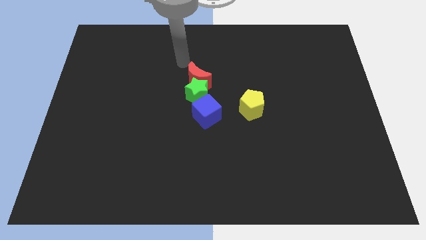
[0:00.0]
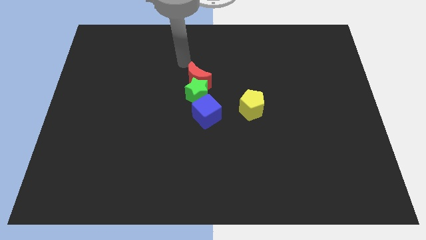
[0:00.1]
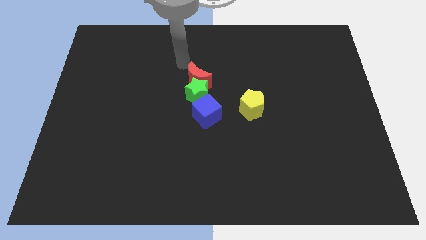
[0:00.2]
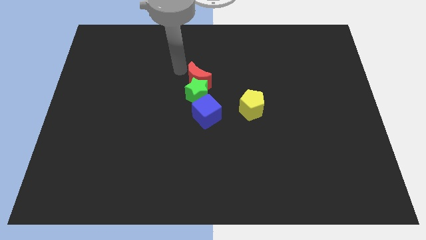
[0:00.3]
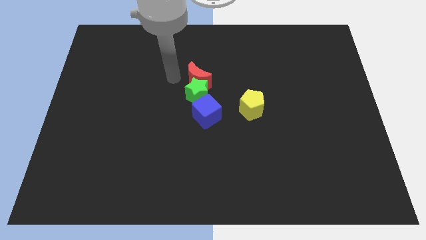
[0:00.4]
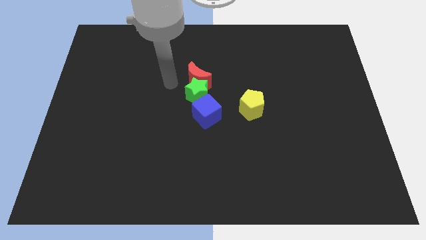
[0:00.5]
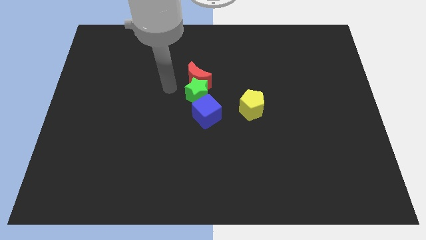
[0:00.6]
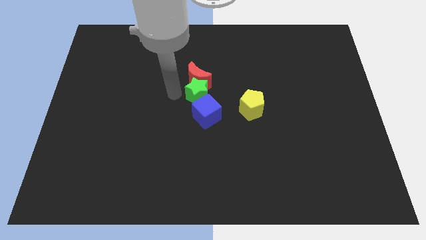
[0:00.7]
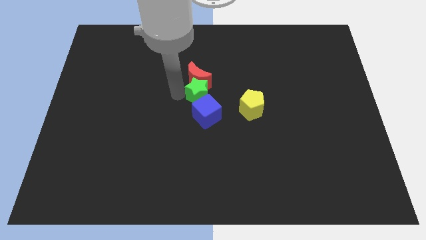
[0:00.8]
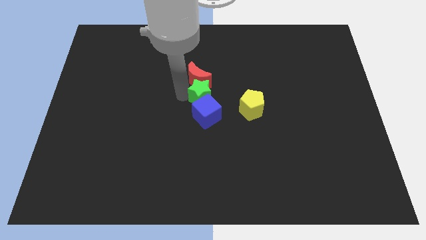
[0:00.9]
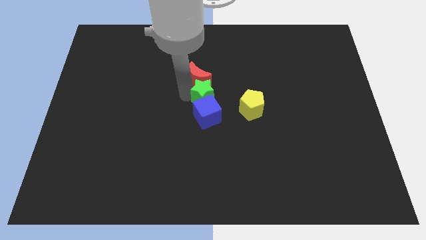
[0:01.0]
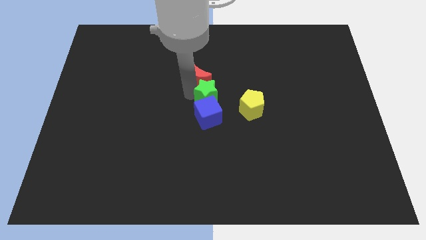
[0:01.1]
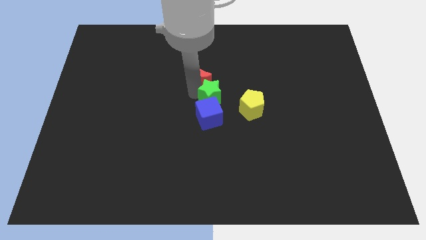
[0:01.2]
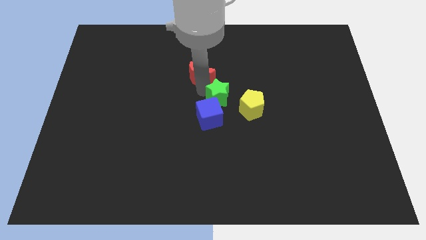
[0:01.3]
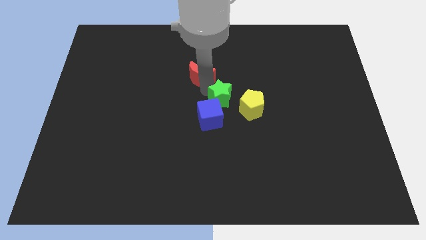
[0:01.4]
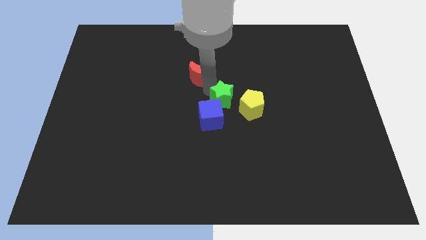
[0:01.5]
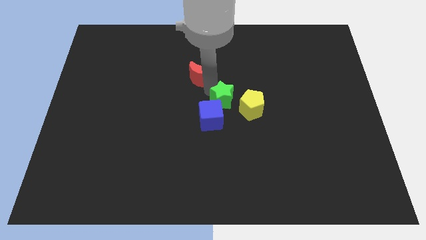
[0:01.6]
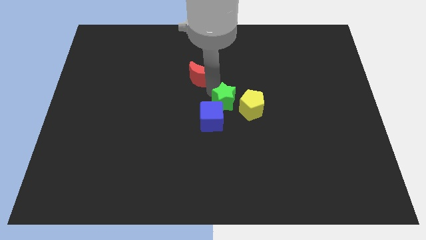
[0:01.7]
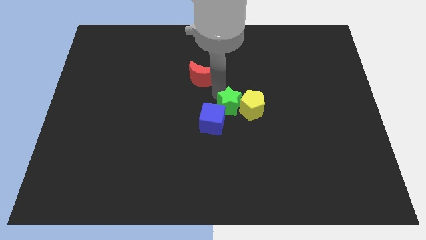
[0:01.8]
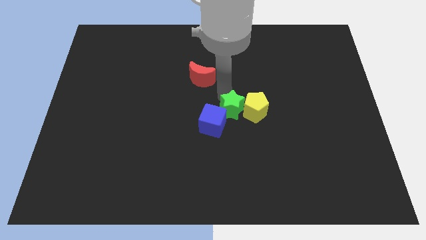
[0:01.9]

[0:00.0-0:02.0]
push the star close to the yellow block

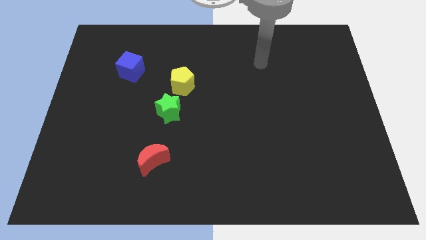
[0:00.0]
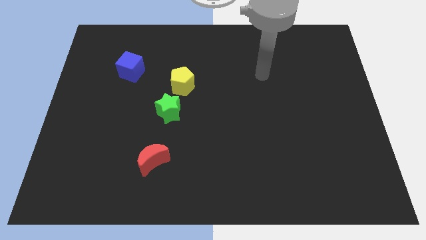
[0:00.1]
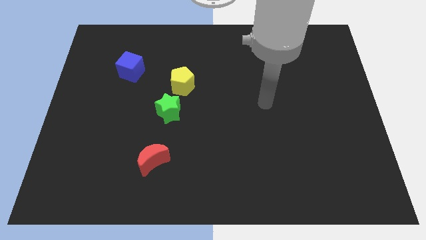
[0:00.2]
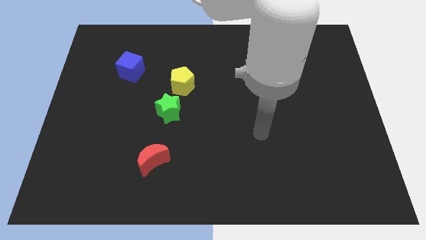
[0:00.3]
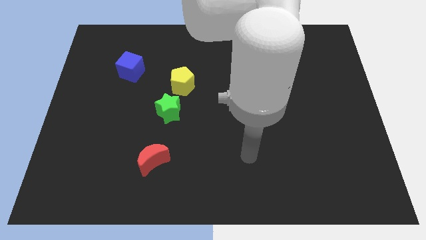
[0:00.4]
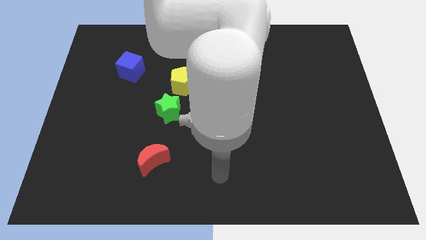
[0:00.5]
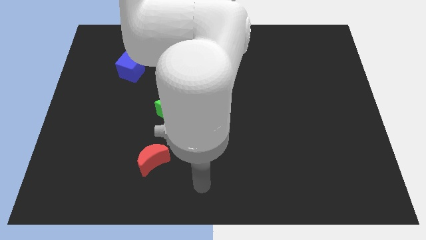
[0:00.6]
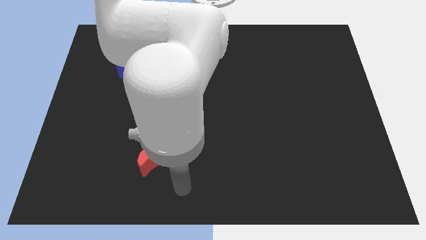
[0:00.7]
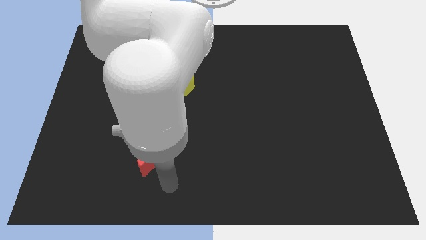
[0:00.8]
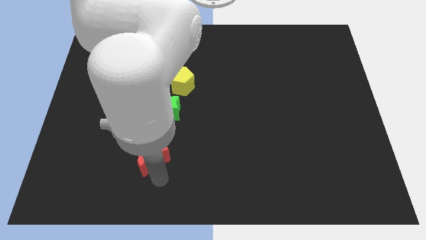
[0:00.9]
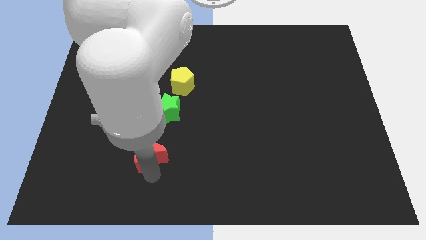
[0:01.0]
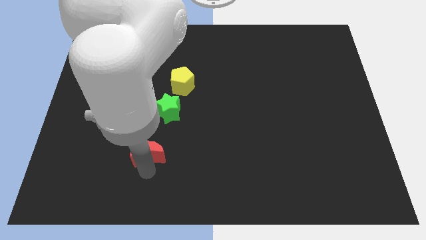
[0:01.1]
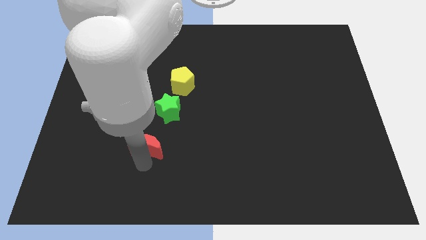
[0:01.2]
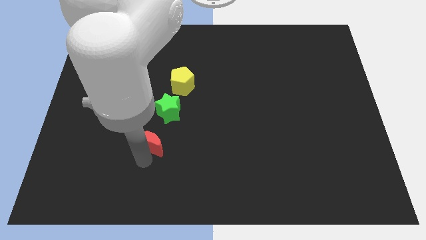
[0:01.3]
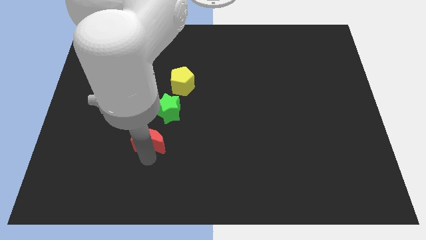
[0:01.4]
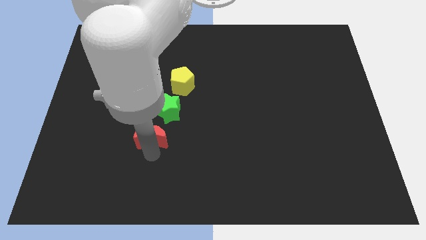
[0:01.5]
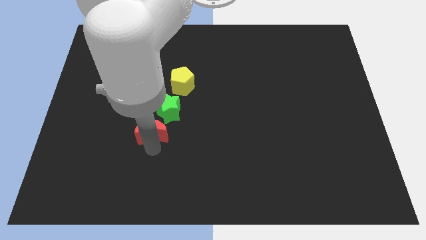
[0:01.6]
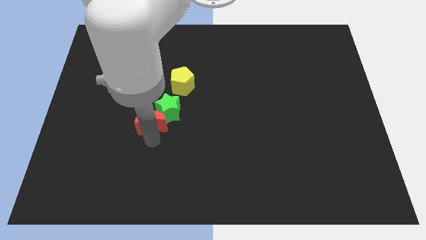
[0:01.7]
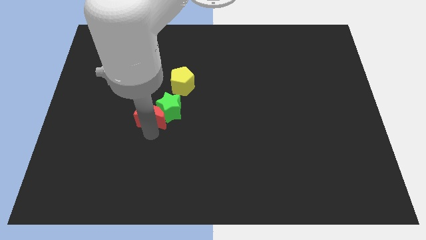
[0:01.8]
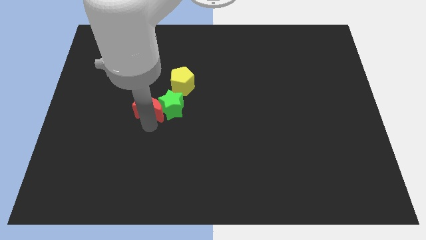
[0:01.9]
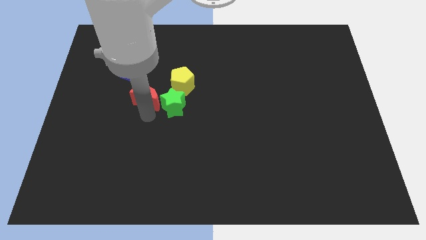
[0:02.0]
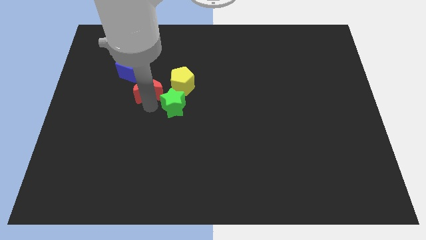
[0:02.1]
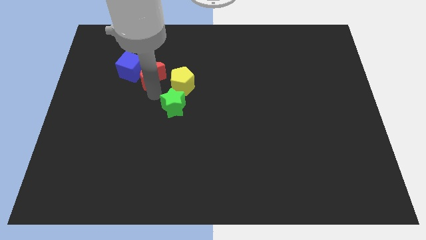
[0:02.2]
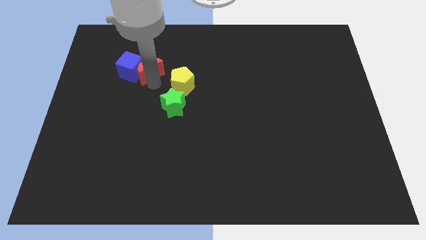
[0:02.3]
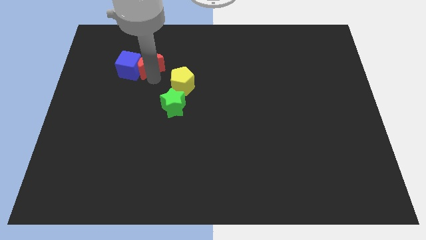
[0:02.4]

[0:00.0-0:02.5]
put the moon close to the cube

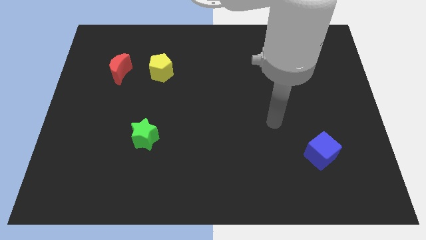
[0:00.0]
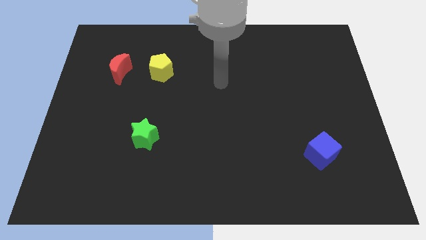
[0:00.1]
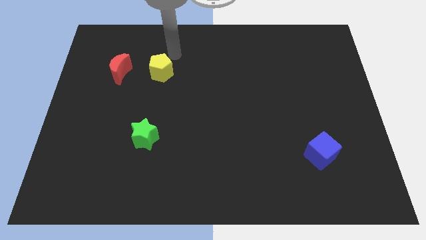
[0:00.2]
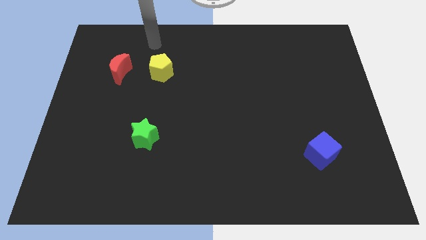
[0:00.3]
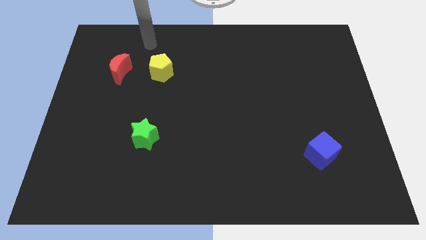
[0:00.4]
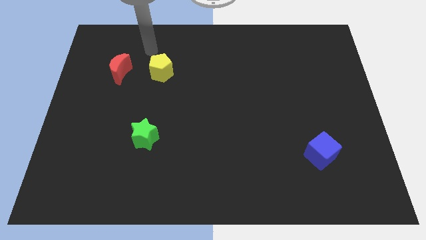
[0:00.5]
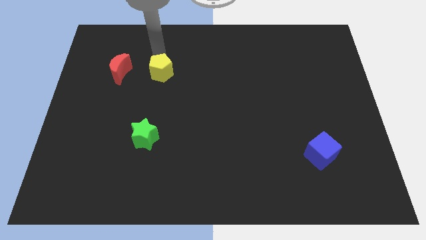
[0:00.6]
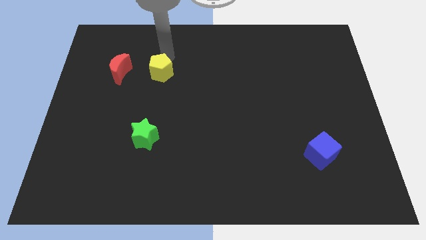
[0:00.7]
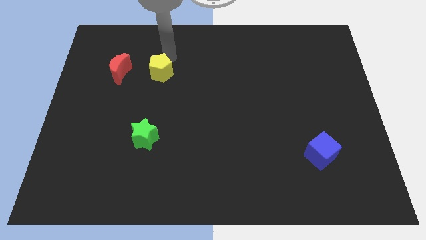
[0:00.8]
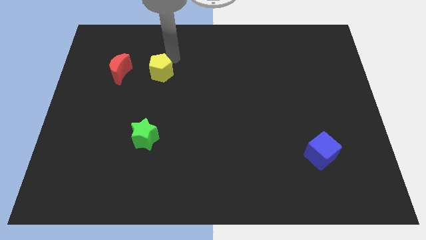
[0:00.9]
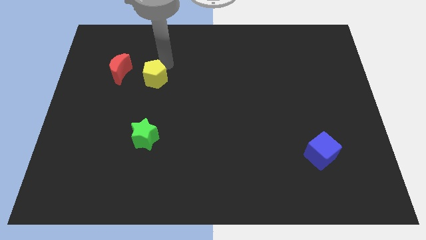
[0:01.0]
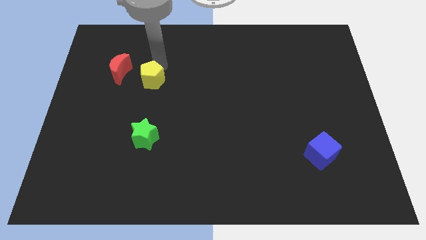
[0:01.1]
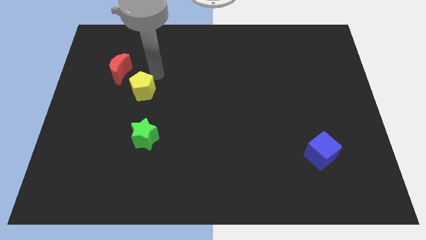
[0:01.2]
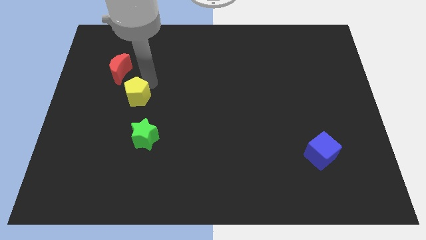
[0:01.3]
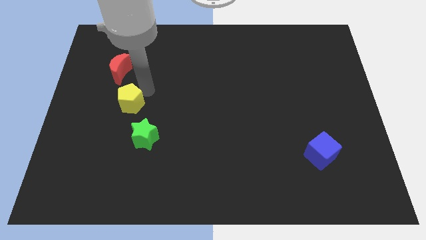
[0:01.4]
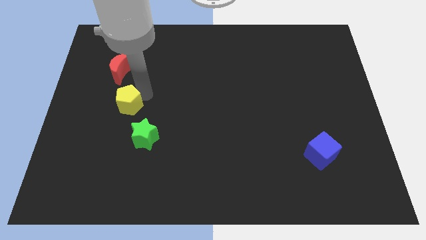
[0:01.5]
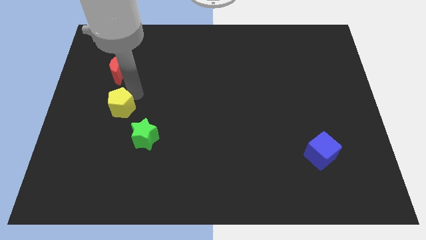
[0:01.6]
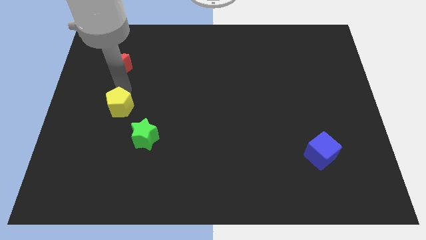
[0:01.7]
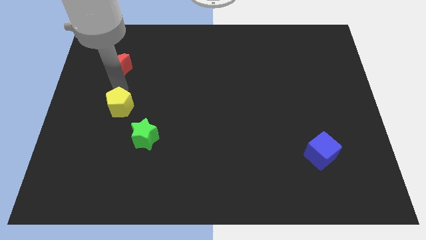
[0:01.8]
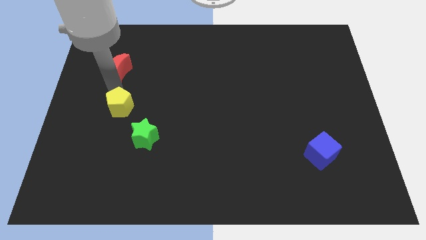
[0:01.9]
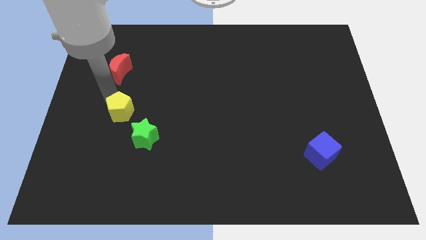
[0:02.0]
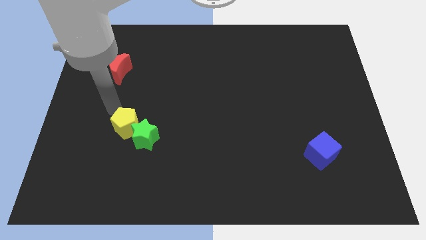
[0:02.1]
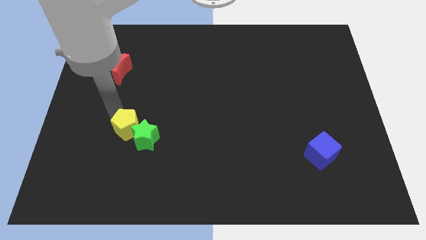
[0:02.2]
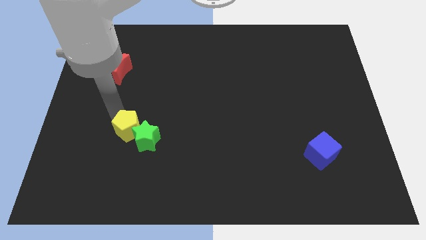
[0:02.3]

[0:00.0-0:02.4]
move the pentagon to the star

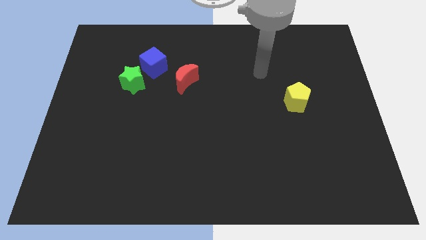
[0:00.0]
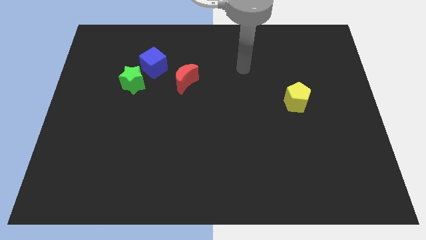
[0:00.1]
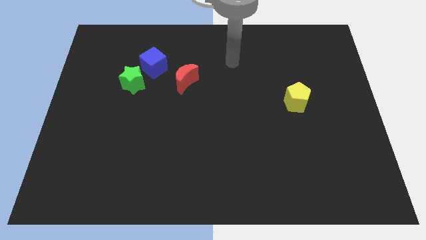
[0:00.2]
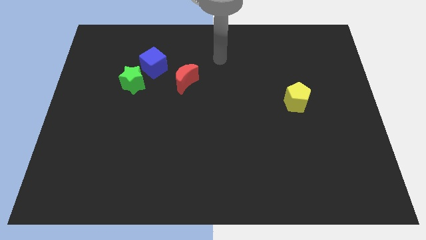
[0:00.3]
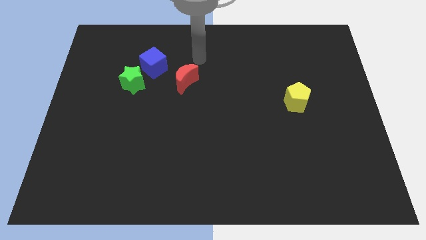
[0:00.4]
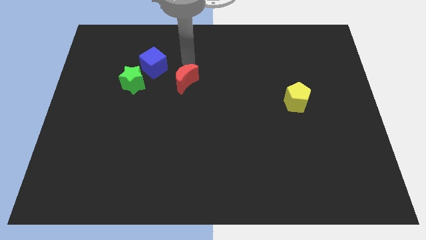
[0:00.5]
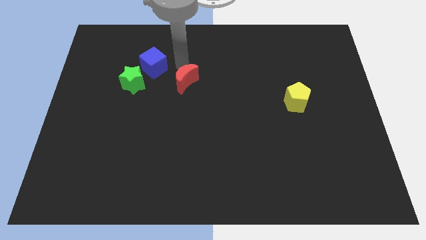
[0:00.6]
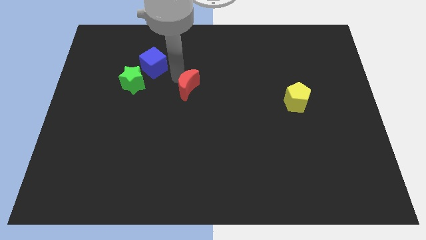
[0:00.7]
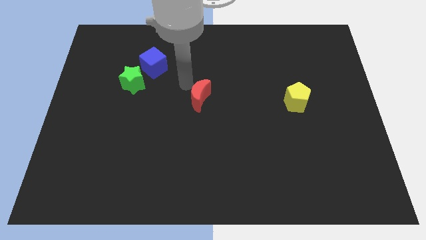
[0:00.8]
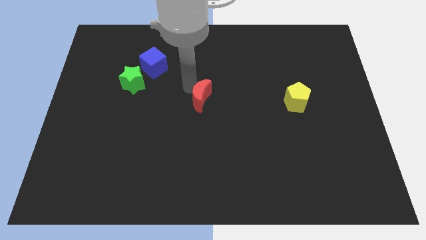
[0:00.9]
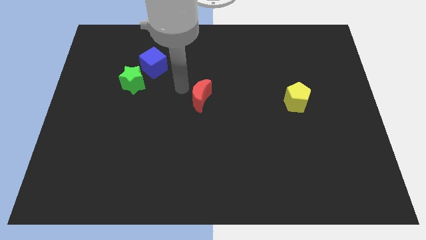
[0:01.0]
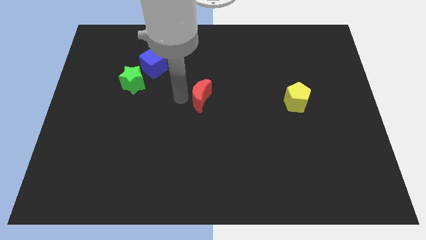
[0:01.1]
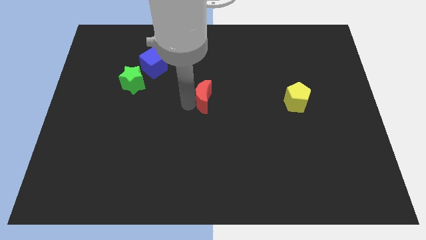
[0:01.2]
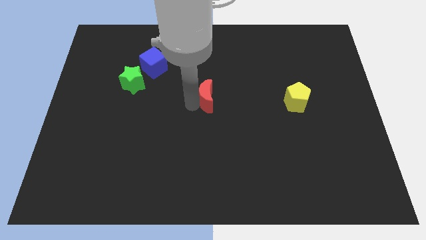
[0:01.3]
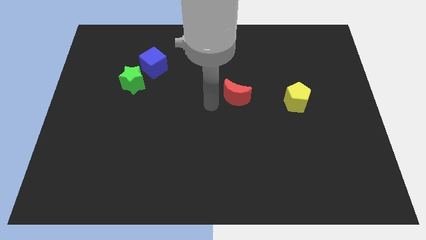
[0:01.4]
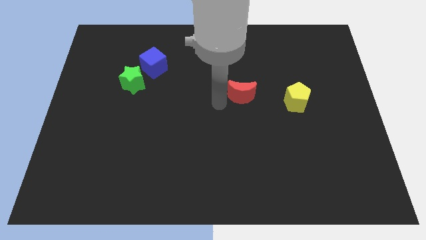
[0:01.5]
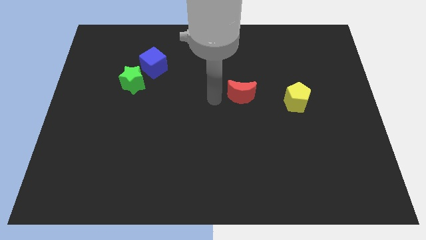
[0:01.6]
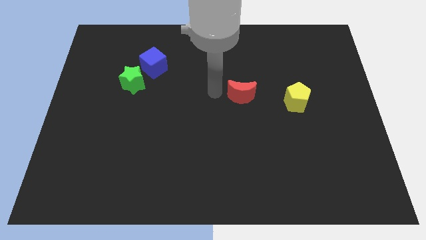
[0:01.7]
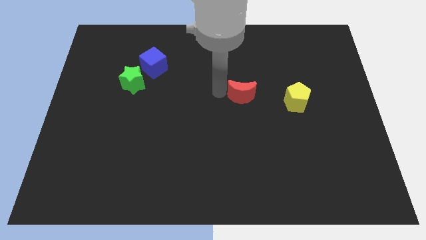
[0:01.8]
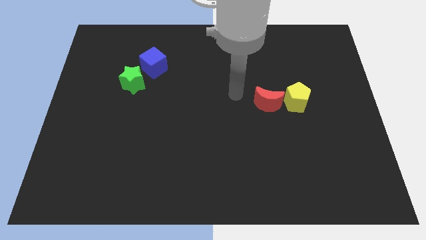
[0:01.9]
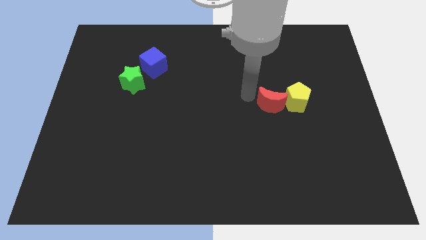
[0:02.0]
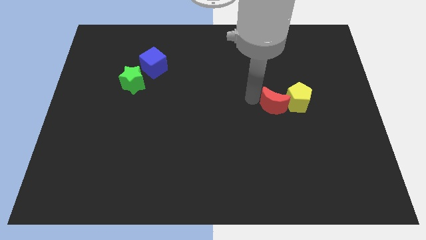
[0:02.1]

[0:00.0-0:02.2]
move the moon to the pentagon
